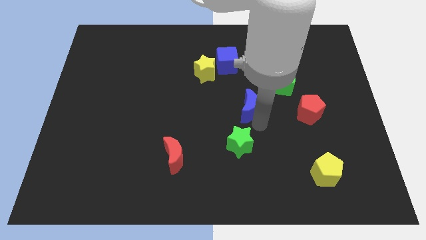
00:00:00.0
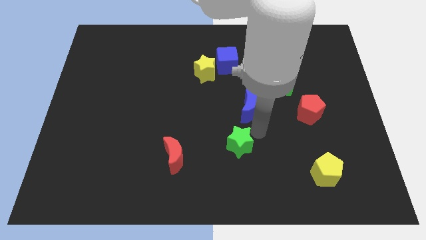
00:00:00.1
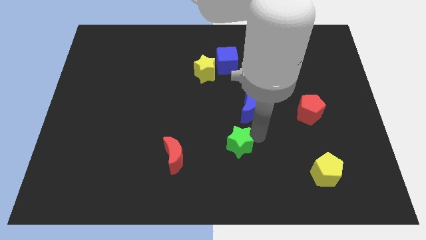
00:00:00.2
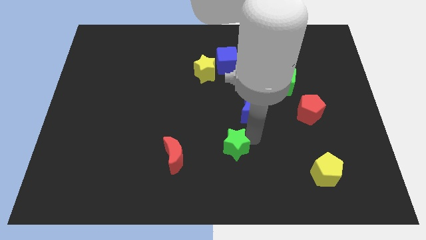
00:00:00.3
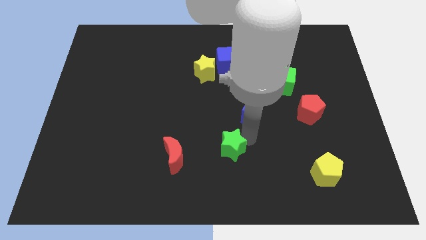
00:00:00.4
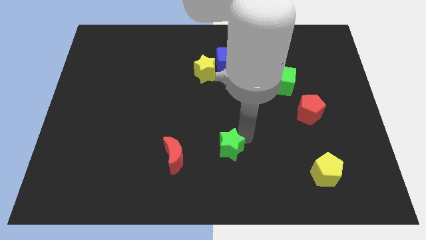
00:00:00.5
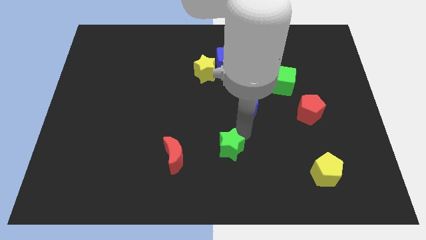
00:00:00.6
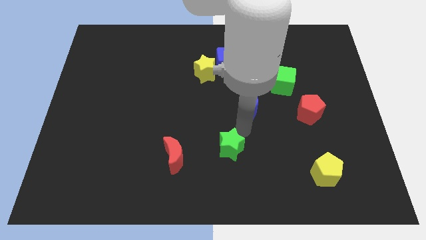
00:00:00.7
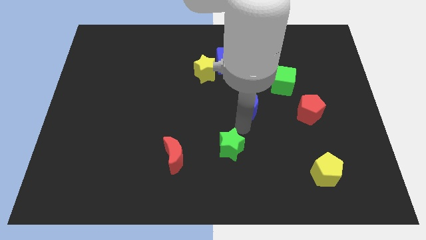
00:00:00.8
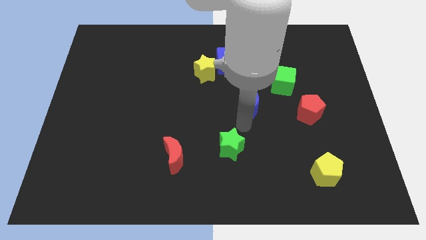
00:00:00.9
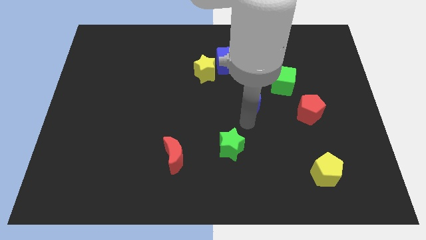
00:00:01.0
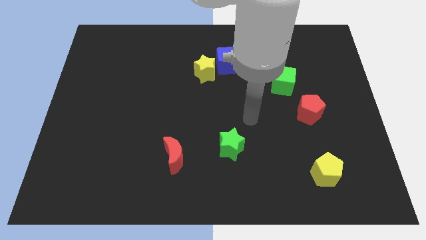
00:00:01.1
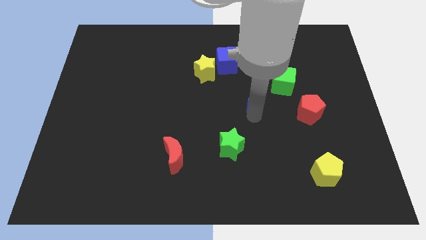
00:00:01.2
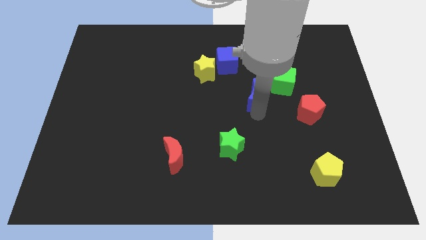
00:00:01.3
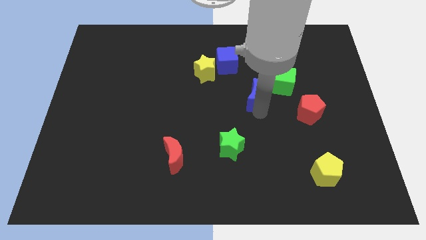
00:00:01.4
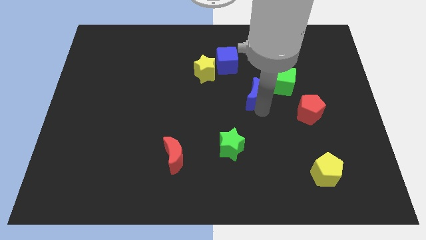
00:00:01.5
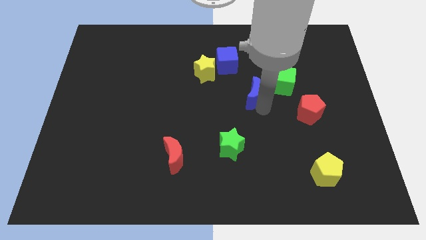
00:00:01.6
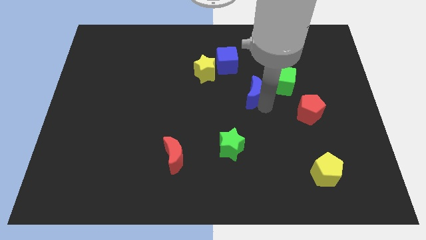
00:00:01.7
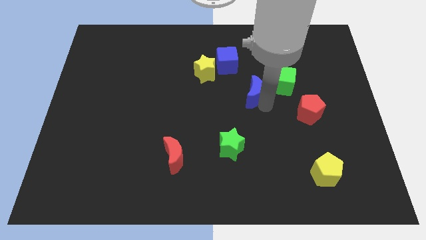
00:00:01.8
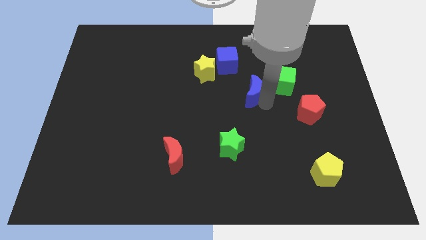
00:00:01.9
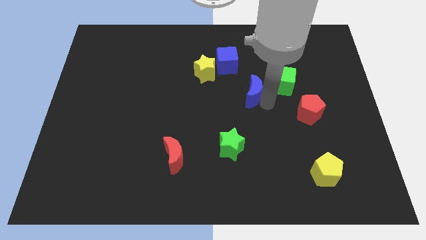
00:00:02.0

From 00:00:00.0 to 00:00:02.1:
separate the blue moon from green star

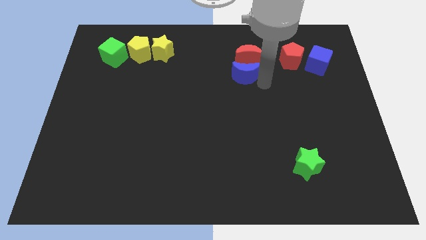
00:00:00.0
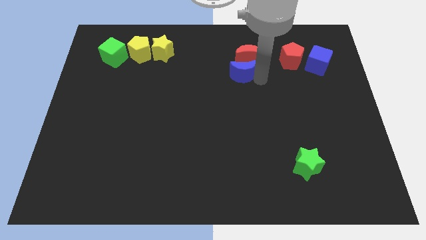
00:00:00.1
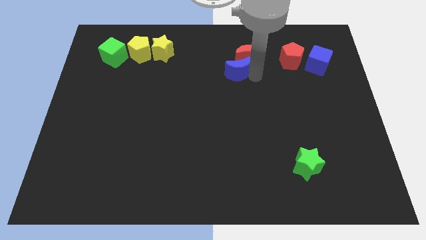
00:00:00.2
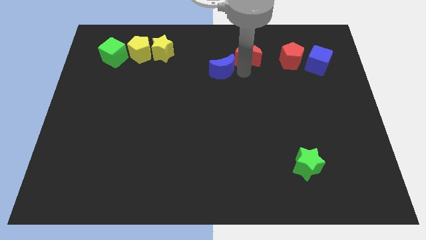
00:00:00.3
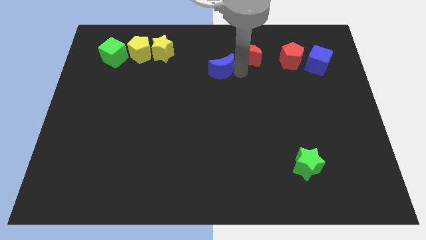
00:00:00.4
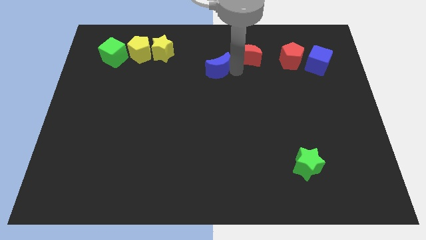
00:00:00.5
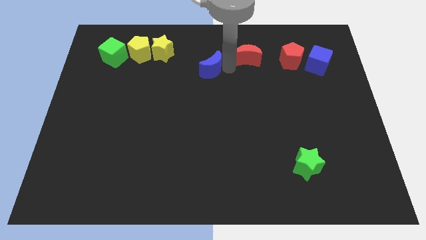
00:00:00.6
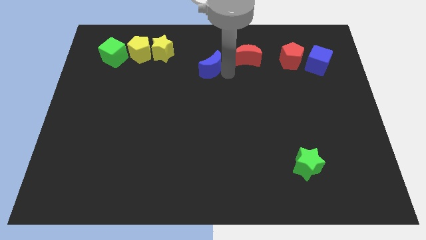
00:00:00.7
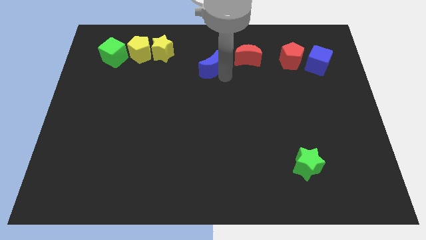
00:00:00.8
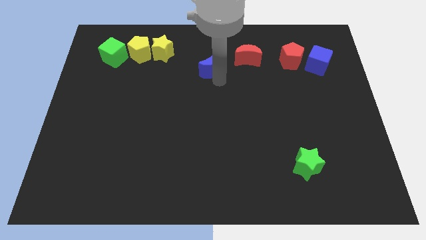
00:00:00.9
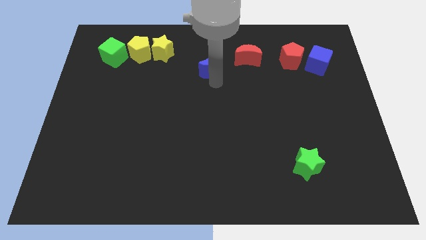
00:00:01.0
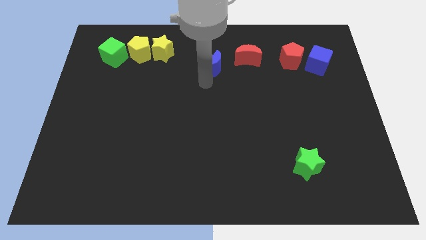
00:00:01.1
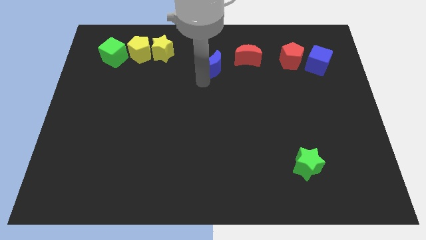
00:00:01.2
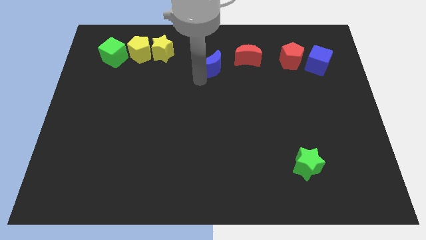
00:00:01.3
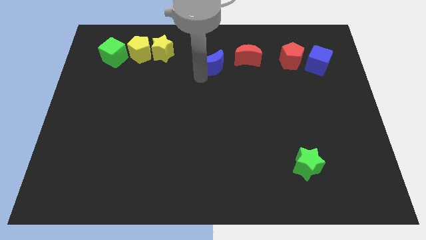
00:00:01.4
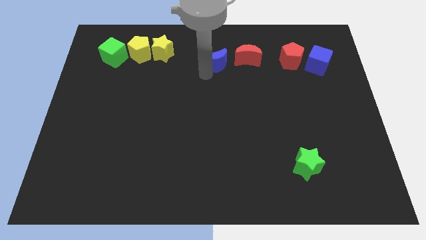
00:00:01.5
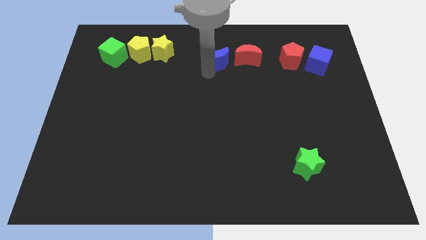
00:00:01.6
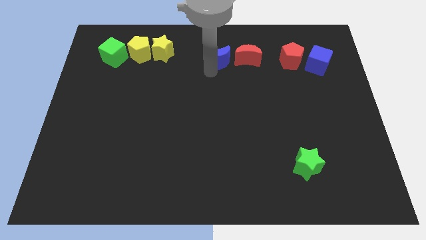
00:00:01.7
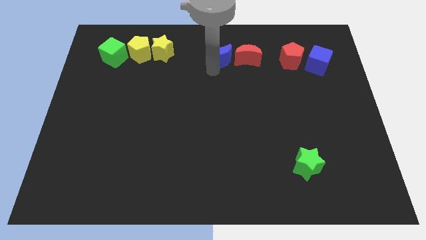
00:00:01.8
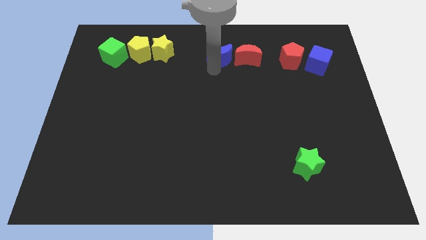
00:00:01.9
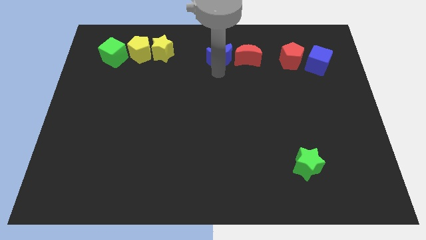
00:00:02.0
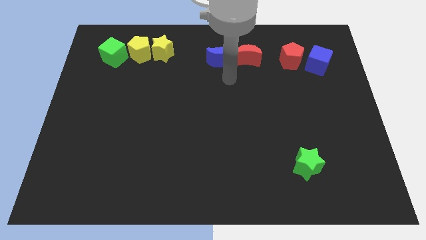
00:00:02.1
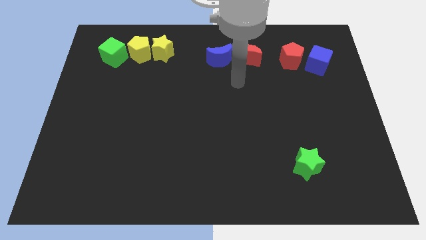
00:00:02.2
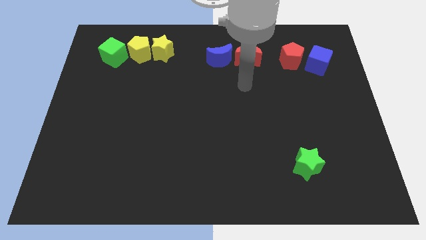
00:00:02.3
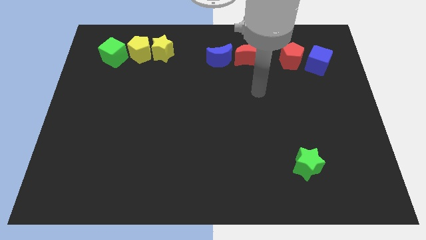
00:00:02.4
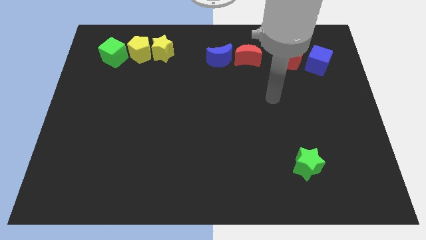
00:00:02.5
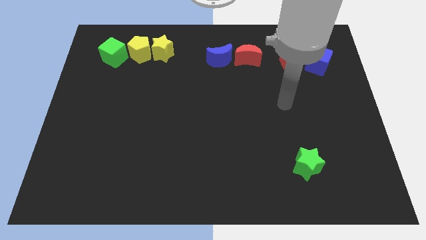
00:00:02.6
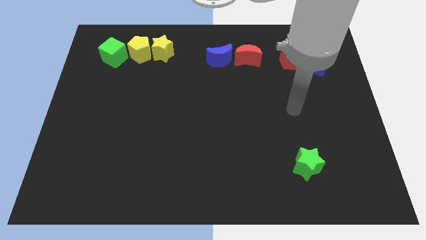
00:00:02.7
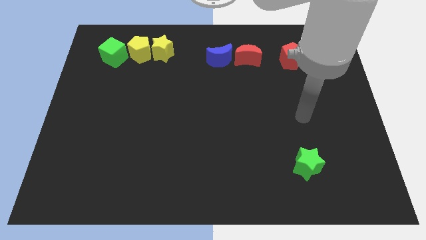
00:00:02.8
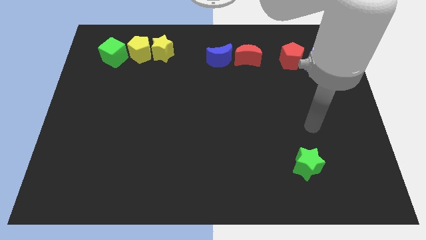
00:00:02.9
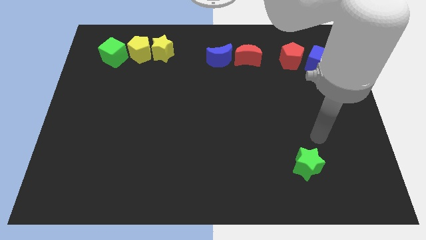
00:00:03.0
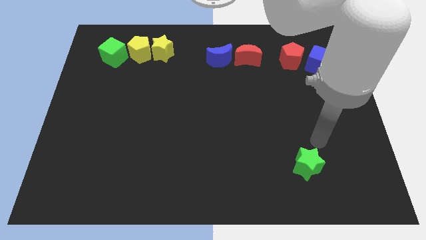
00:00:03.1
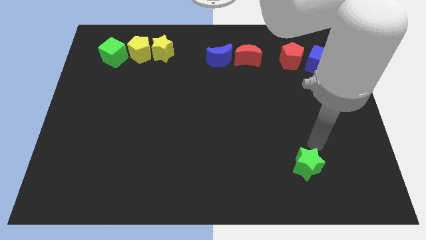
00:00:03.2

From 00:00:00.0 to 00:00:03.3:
place the blue moon to the left side of the red moon

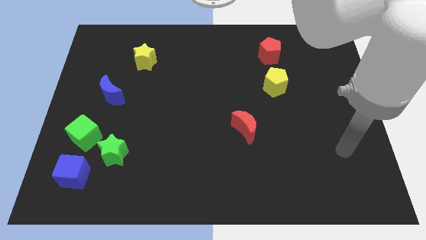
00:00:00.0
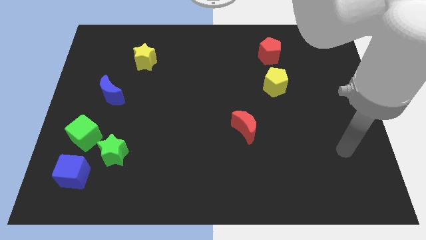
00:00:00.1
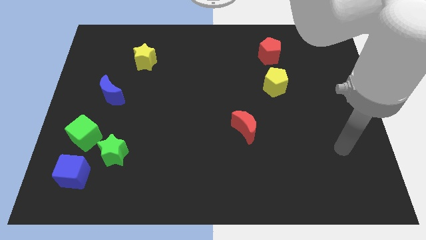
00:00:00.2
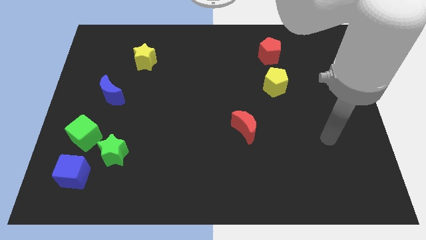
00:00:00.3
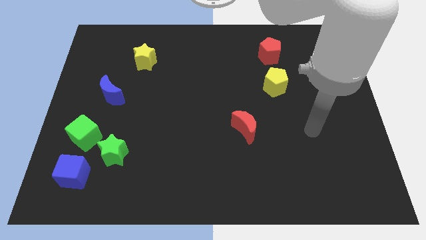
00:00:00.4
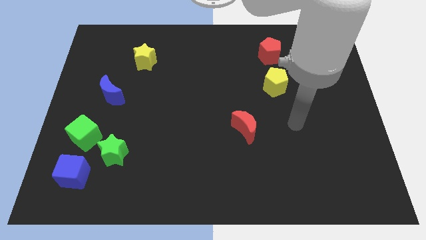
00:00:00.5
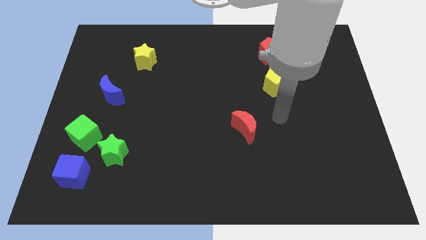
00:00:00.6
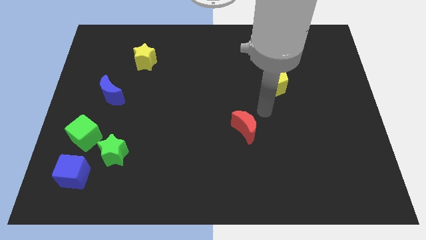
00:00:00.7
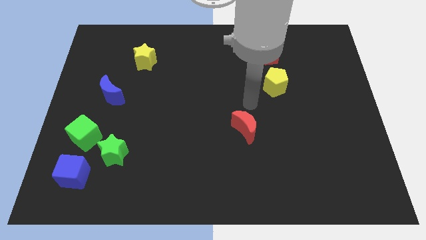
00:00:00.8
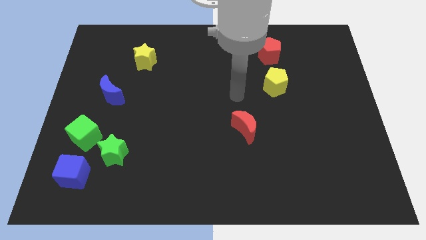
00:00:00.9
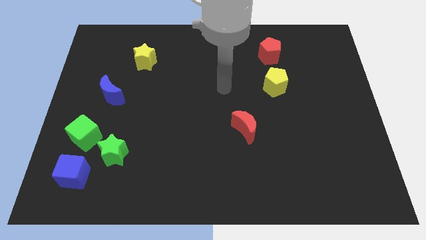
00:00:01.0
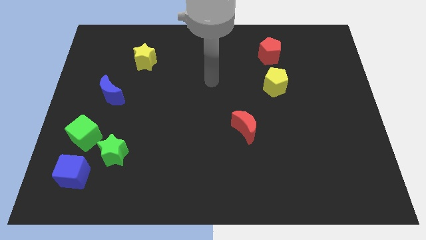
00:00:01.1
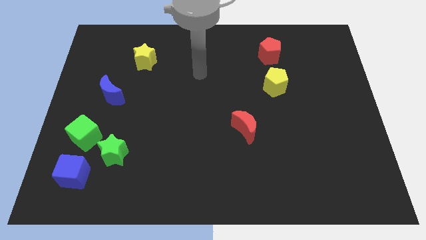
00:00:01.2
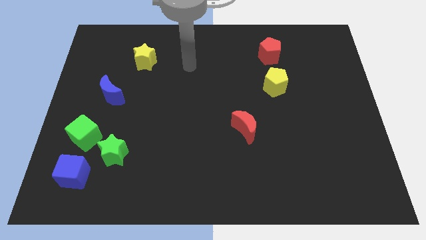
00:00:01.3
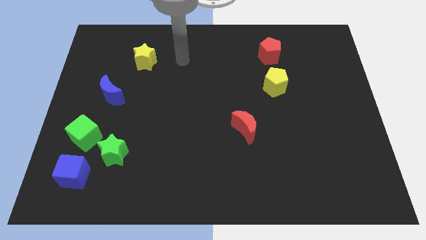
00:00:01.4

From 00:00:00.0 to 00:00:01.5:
point your arm at the right of the yellow star

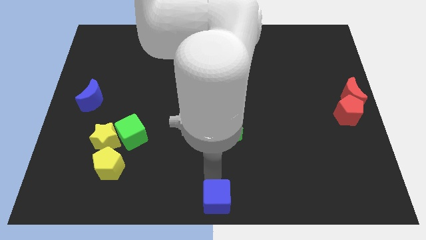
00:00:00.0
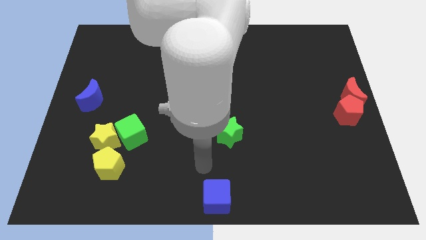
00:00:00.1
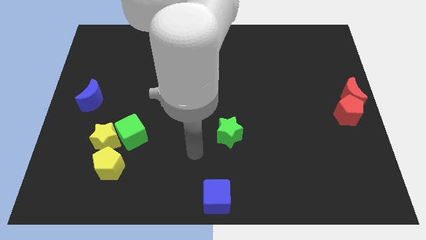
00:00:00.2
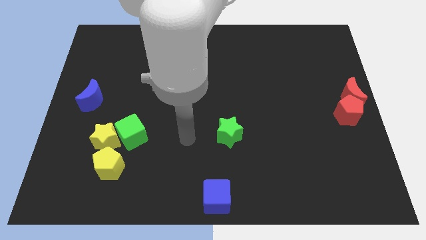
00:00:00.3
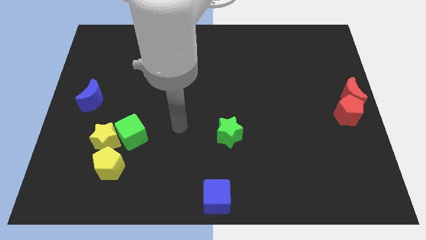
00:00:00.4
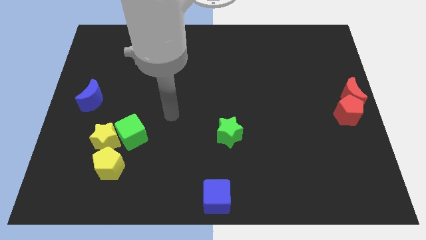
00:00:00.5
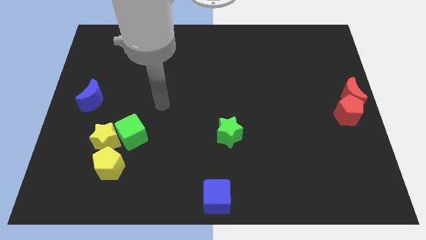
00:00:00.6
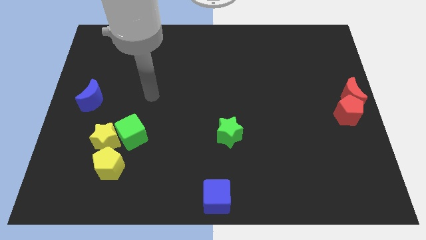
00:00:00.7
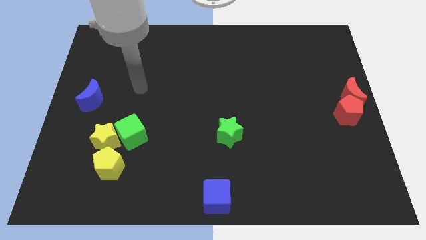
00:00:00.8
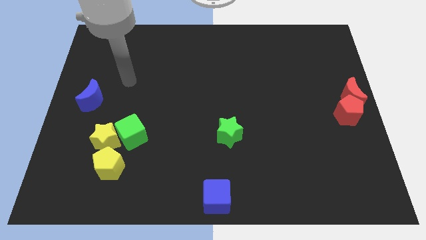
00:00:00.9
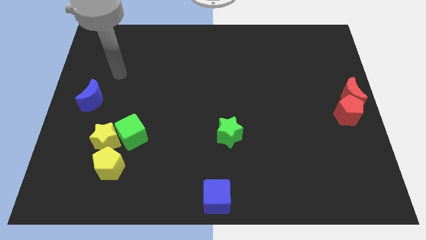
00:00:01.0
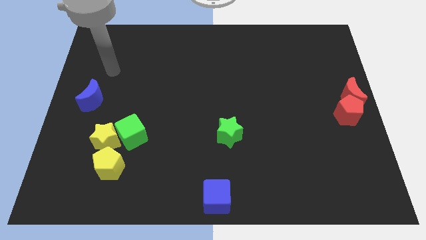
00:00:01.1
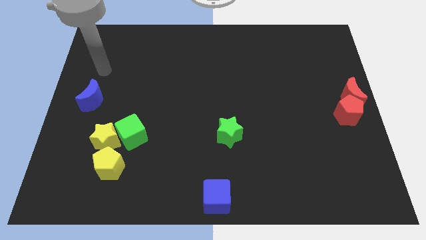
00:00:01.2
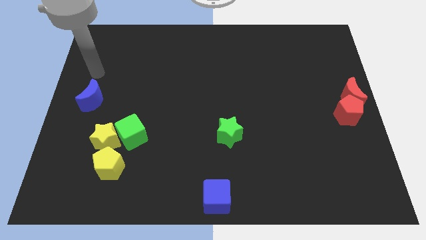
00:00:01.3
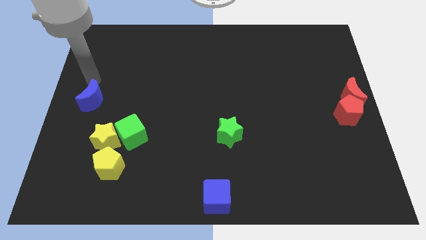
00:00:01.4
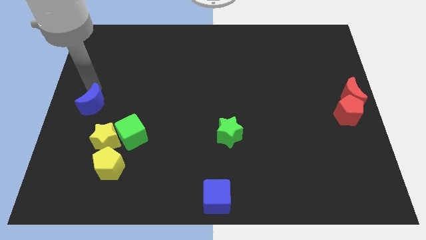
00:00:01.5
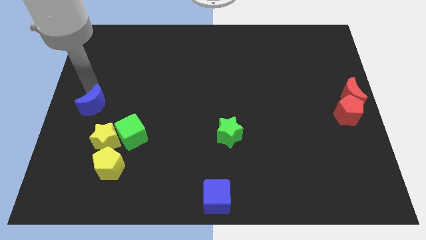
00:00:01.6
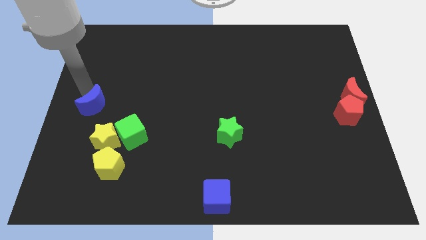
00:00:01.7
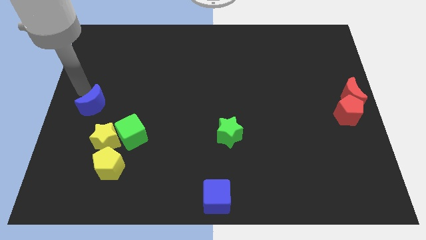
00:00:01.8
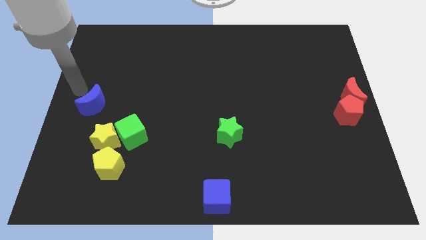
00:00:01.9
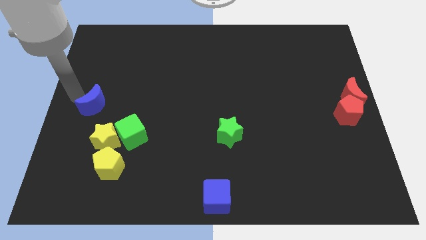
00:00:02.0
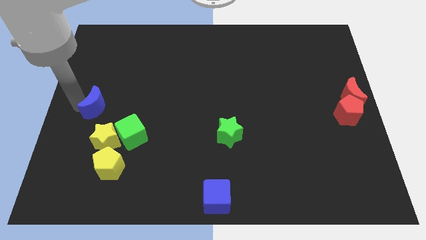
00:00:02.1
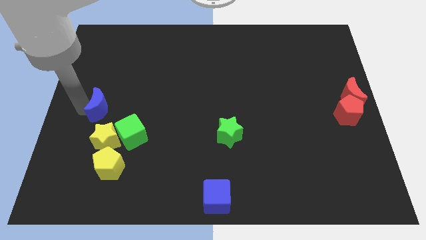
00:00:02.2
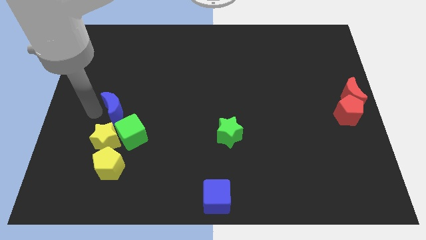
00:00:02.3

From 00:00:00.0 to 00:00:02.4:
push blue moon near green cube
